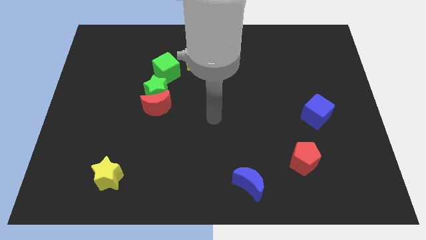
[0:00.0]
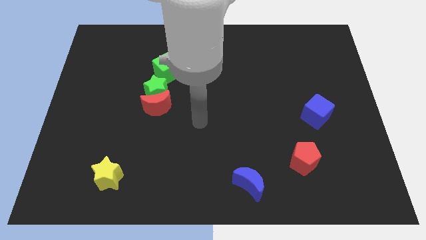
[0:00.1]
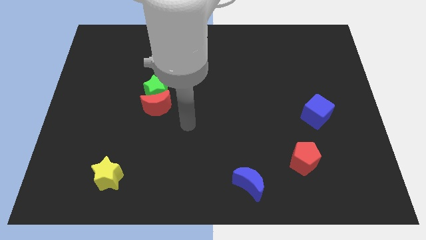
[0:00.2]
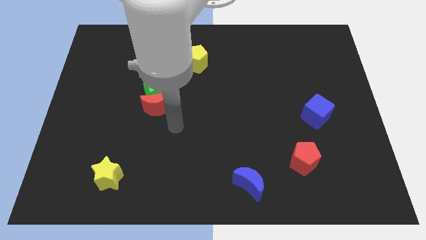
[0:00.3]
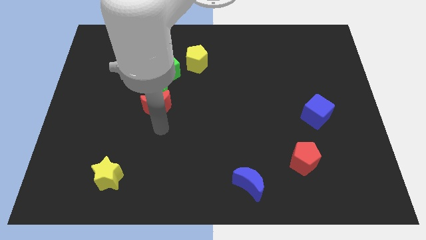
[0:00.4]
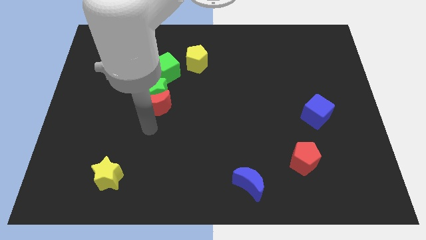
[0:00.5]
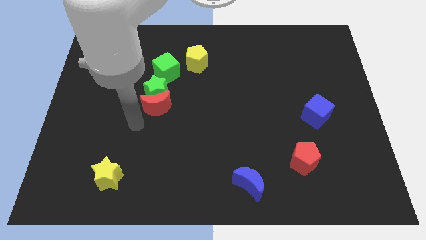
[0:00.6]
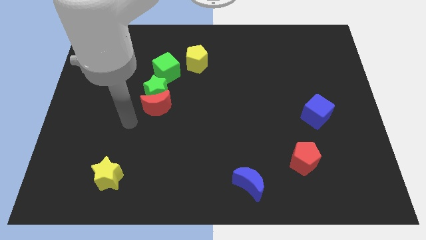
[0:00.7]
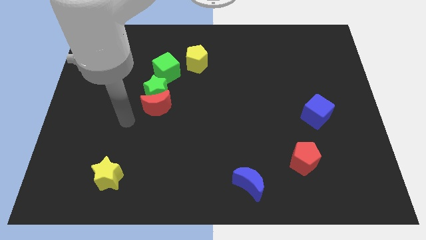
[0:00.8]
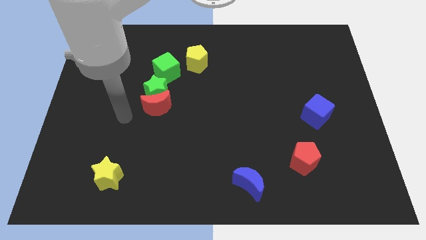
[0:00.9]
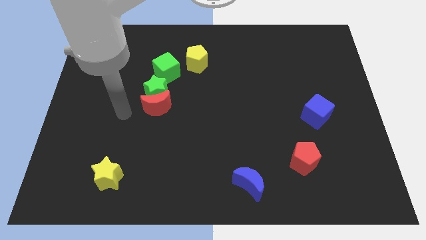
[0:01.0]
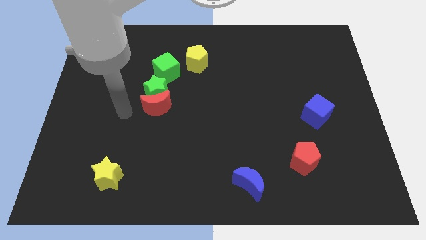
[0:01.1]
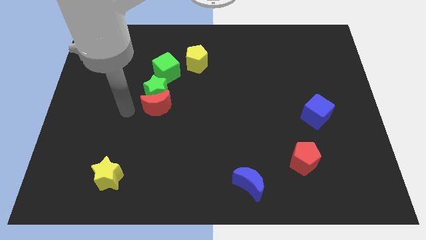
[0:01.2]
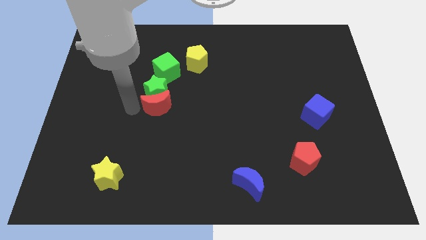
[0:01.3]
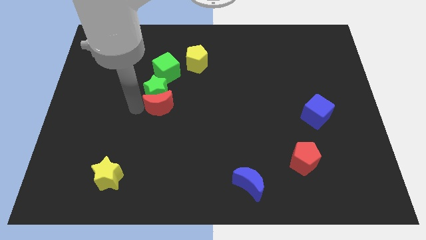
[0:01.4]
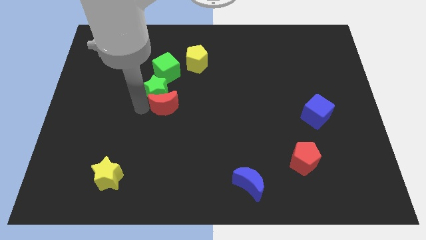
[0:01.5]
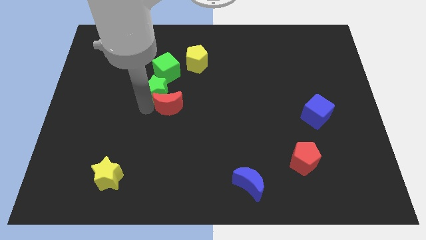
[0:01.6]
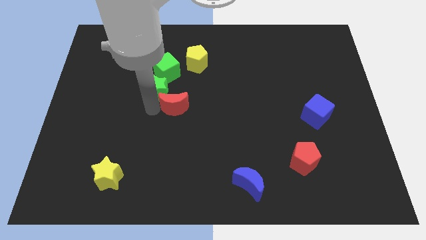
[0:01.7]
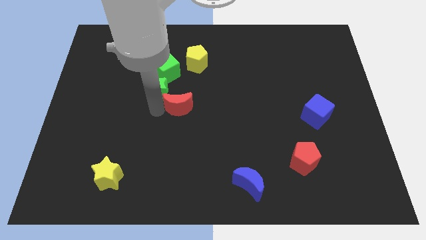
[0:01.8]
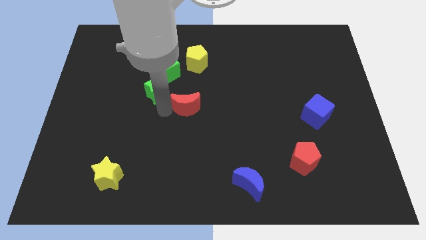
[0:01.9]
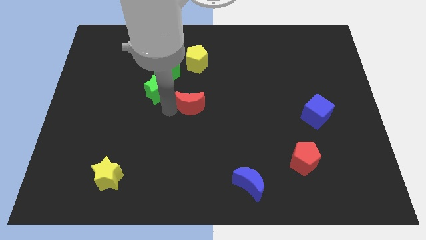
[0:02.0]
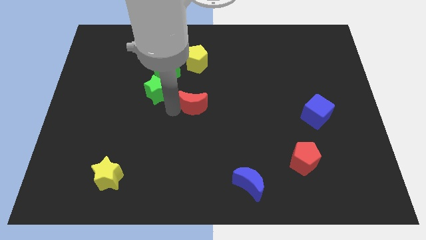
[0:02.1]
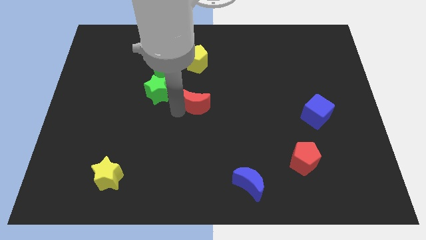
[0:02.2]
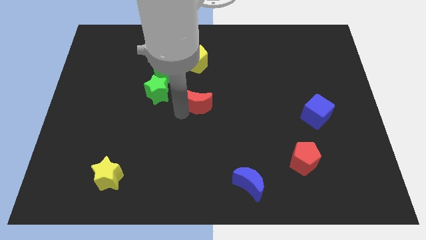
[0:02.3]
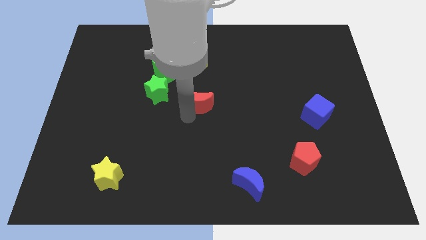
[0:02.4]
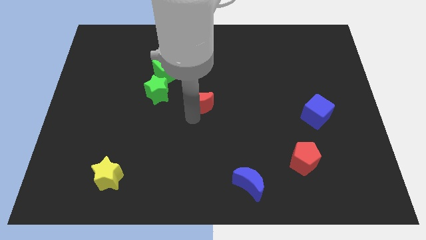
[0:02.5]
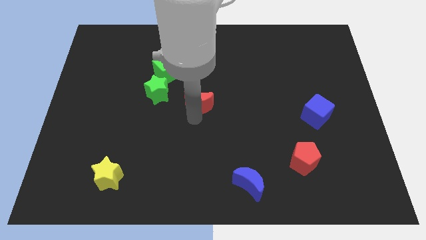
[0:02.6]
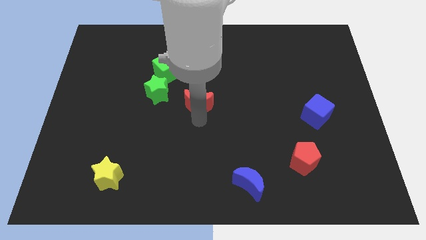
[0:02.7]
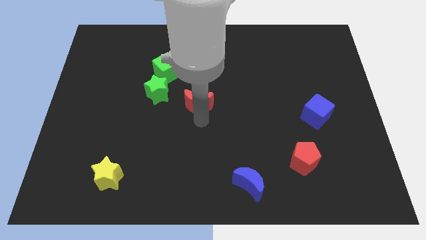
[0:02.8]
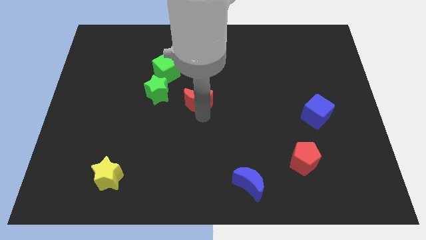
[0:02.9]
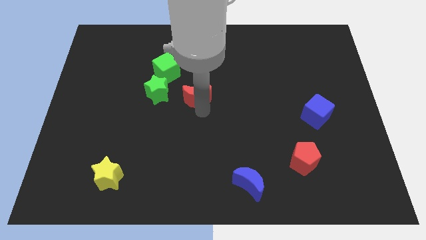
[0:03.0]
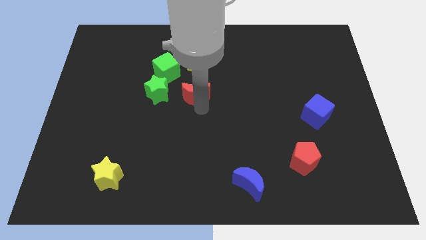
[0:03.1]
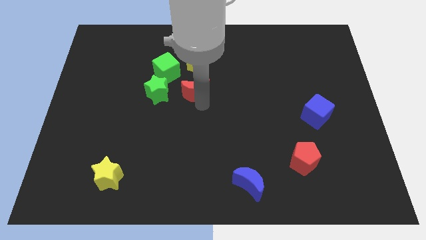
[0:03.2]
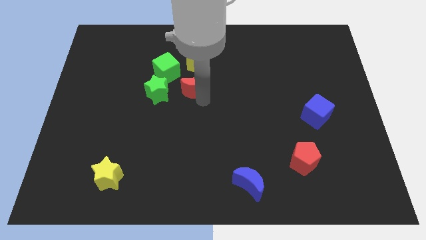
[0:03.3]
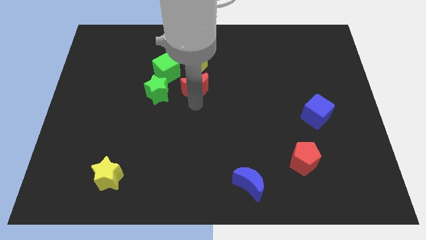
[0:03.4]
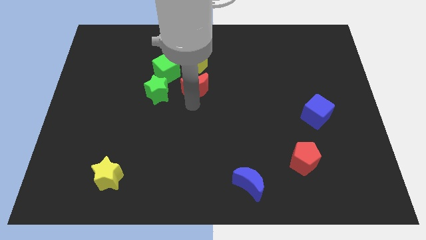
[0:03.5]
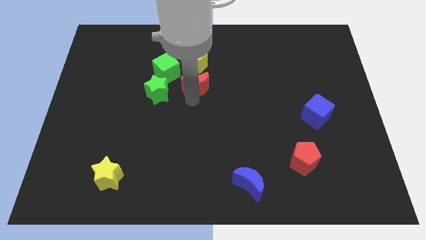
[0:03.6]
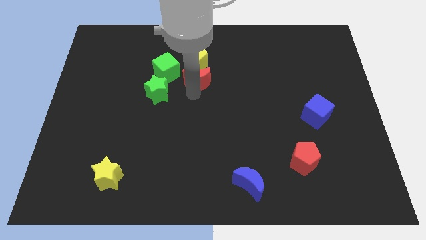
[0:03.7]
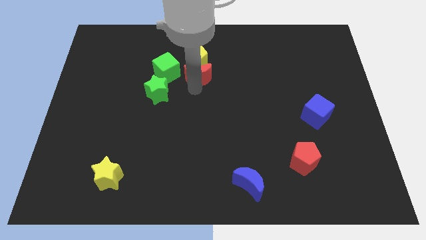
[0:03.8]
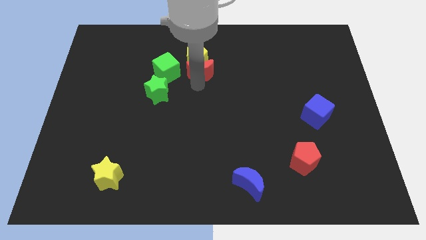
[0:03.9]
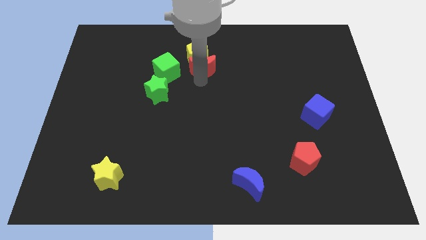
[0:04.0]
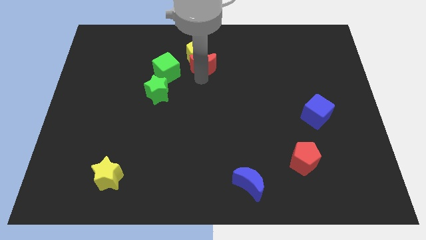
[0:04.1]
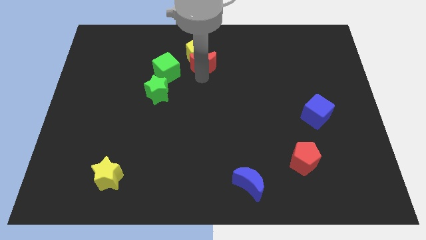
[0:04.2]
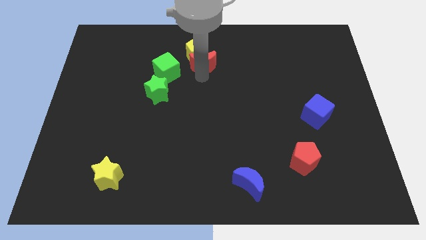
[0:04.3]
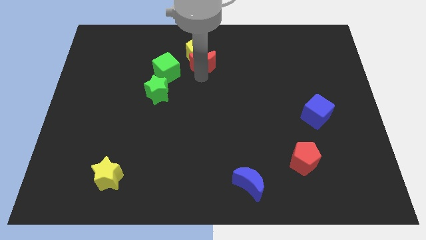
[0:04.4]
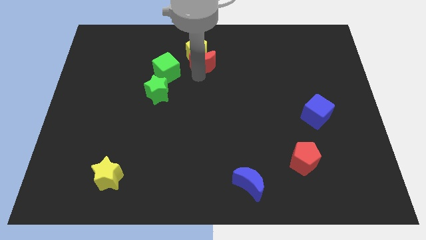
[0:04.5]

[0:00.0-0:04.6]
push the red moon into the yellow pentagon

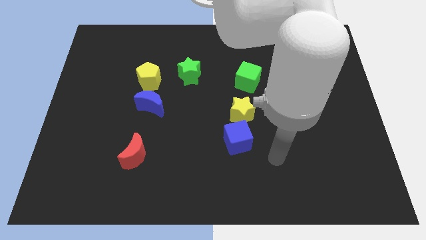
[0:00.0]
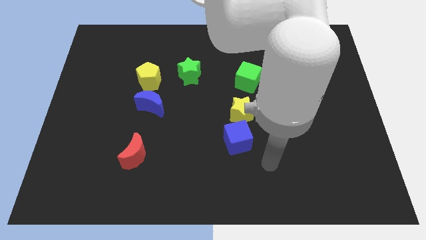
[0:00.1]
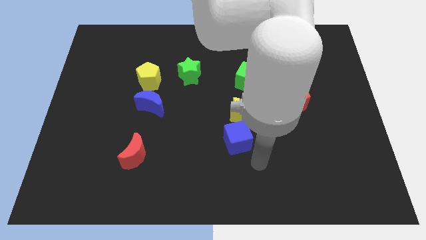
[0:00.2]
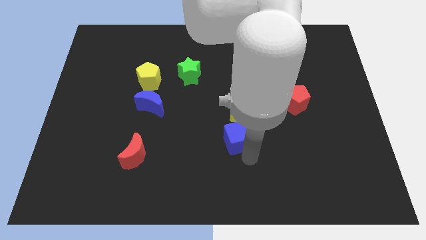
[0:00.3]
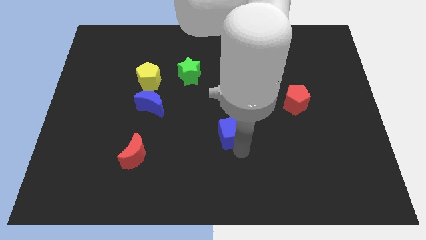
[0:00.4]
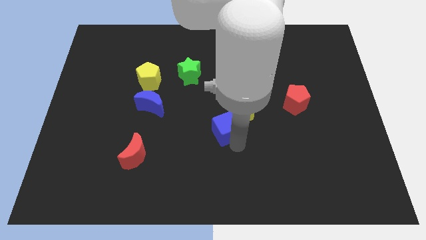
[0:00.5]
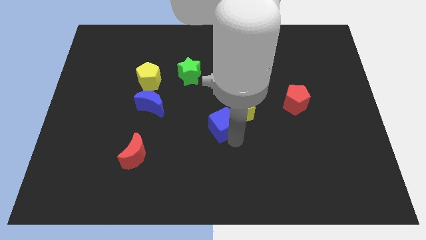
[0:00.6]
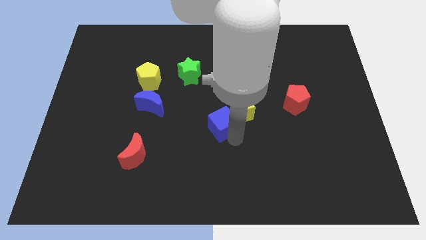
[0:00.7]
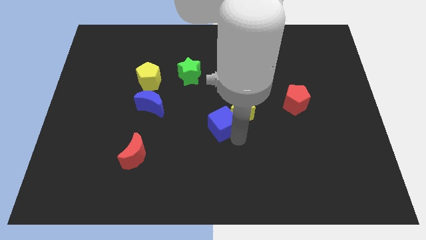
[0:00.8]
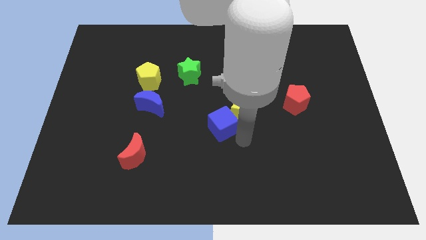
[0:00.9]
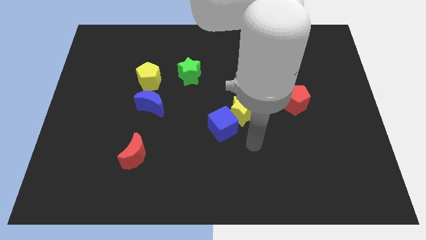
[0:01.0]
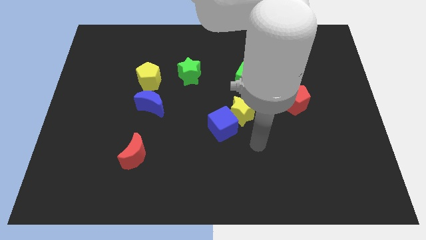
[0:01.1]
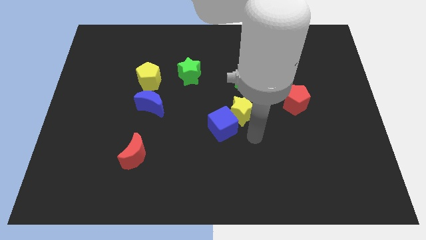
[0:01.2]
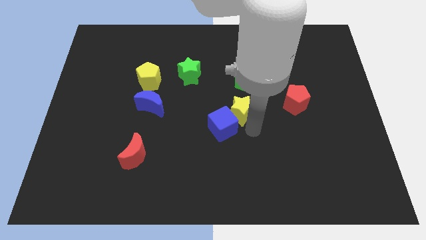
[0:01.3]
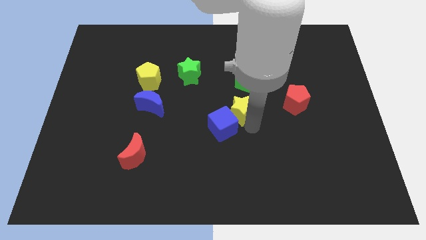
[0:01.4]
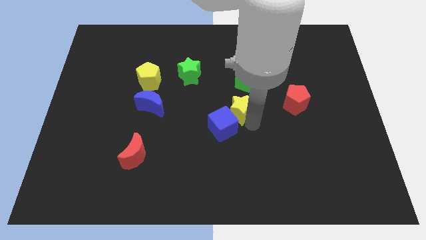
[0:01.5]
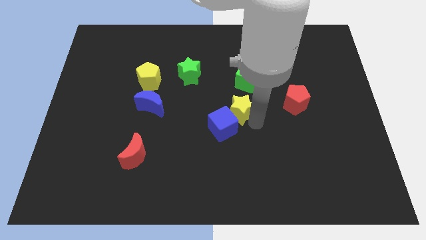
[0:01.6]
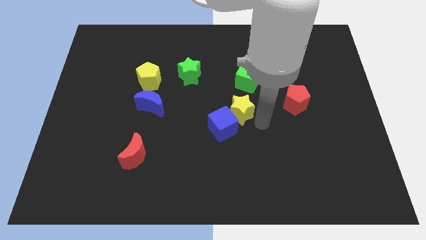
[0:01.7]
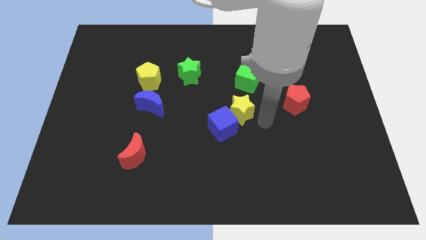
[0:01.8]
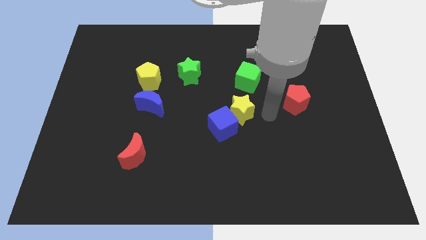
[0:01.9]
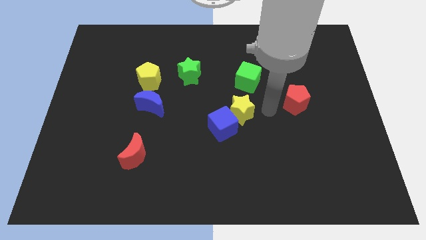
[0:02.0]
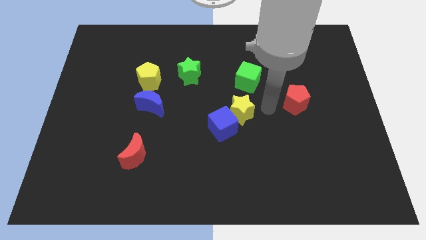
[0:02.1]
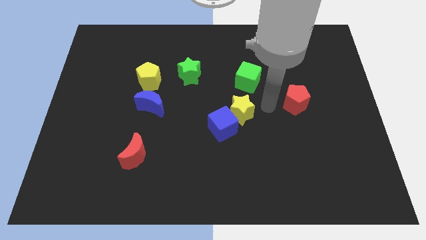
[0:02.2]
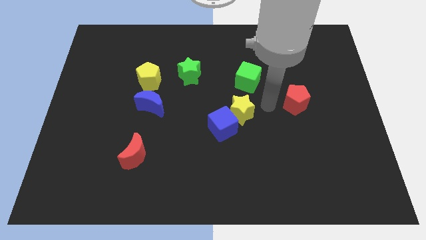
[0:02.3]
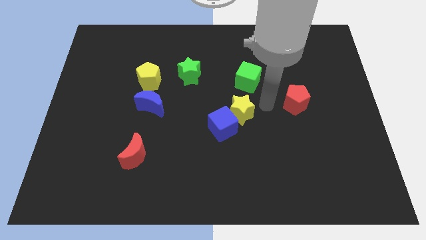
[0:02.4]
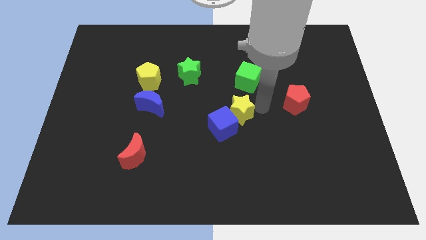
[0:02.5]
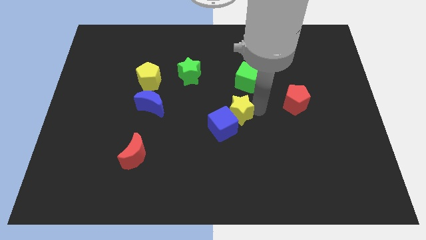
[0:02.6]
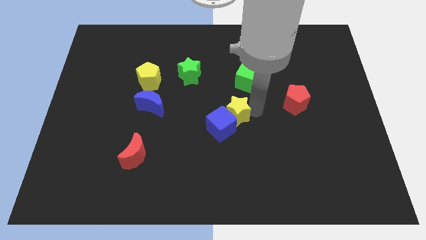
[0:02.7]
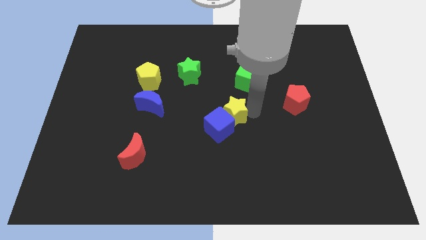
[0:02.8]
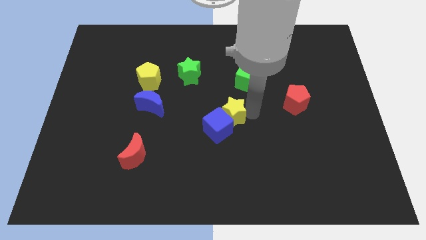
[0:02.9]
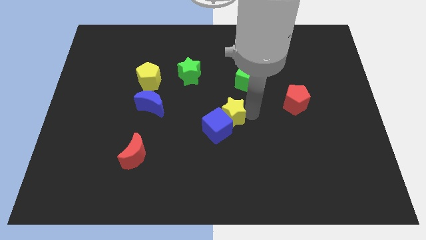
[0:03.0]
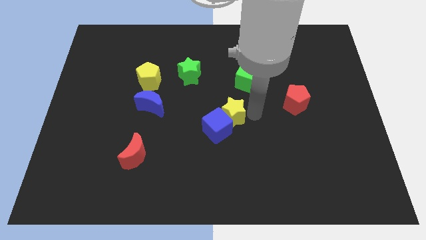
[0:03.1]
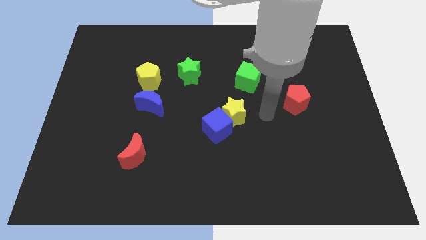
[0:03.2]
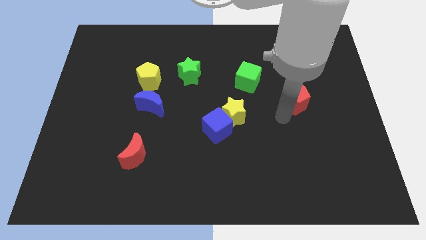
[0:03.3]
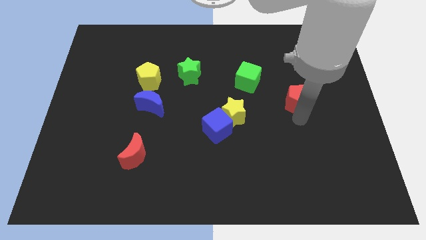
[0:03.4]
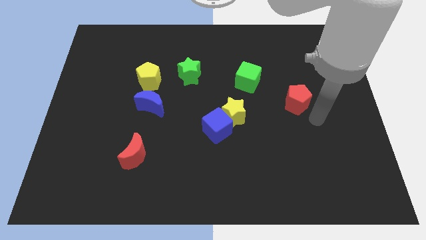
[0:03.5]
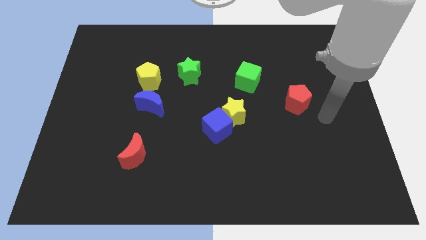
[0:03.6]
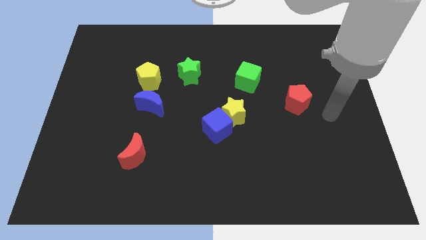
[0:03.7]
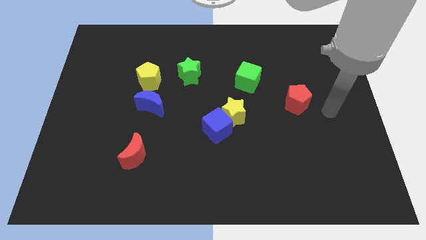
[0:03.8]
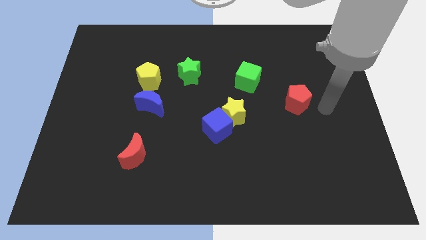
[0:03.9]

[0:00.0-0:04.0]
push the yellow star into the blue cube to the center of the board

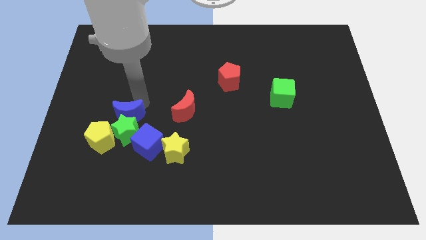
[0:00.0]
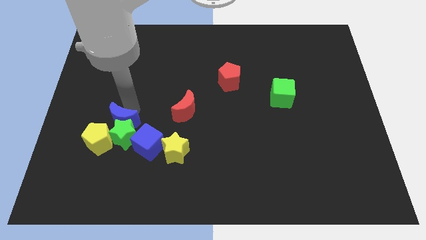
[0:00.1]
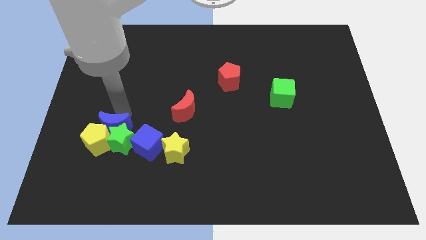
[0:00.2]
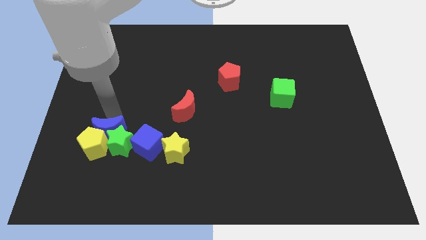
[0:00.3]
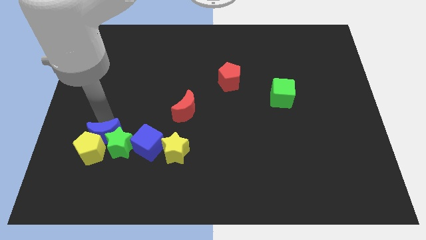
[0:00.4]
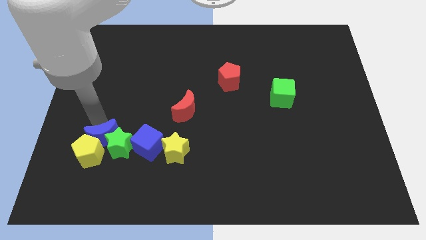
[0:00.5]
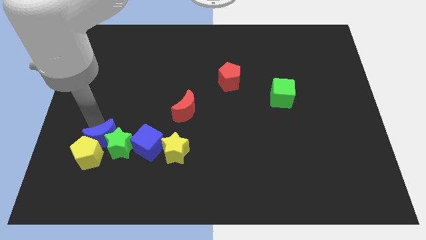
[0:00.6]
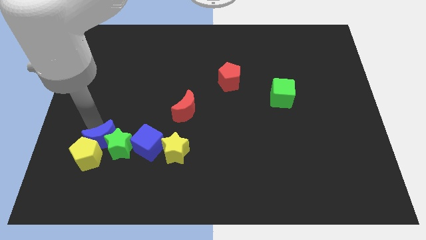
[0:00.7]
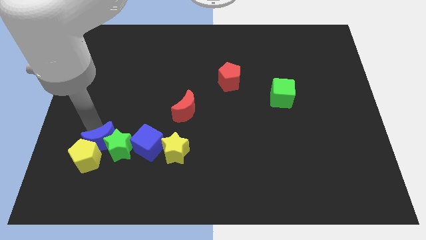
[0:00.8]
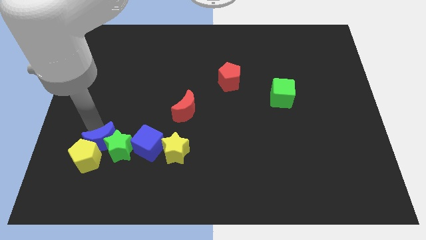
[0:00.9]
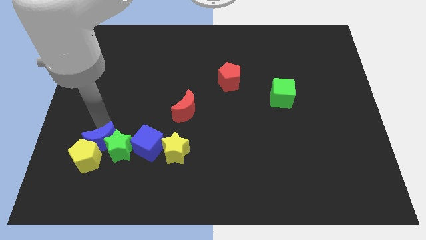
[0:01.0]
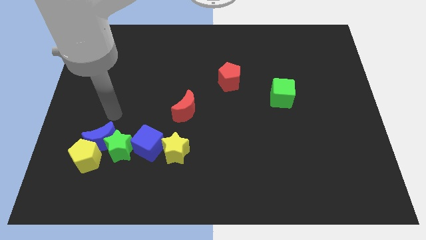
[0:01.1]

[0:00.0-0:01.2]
push the blue crescent yellow pentagon and green star slightly downwards
